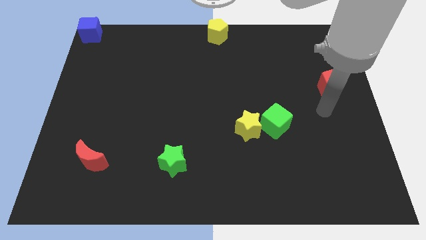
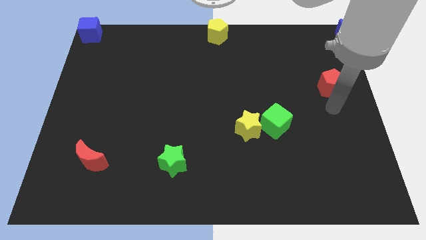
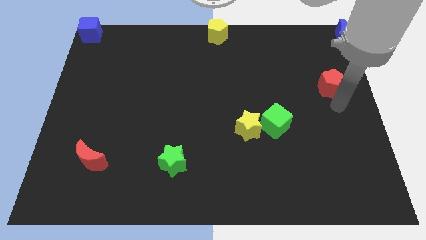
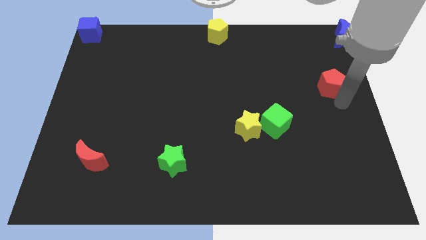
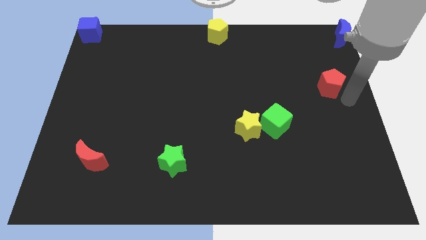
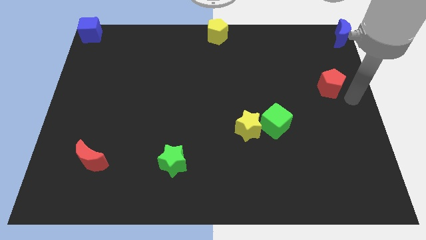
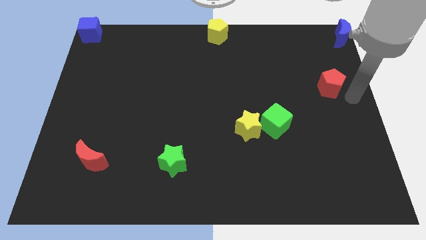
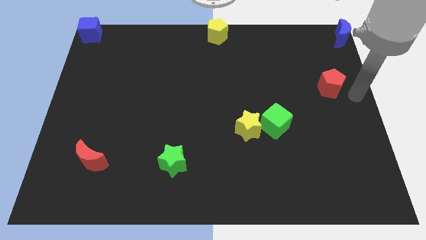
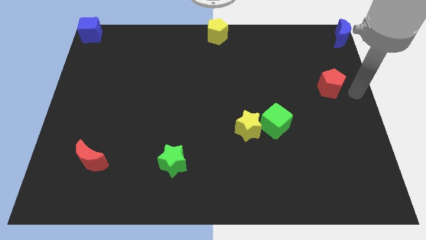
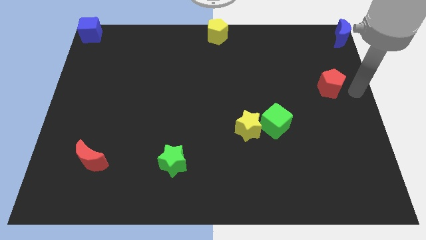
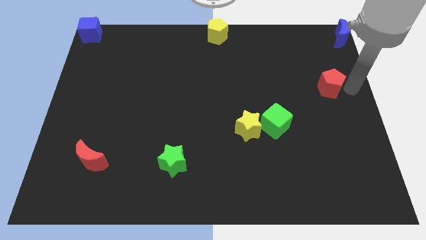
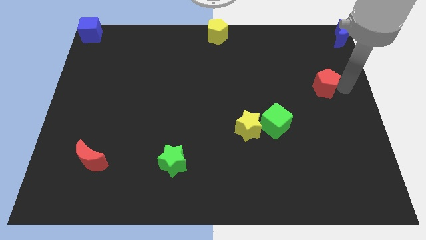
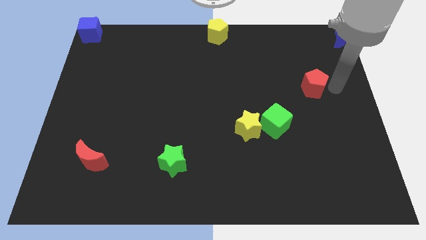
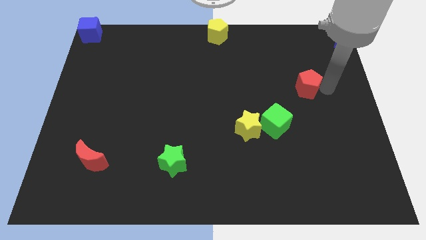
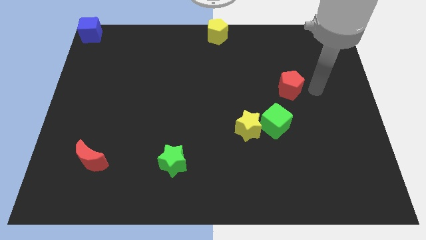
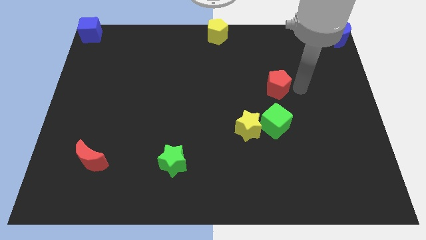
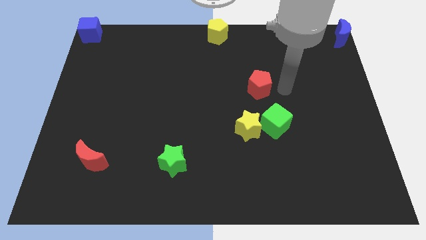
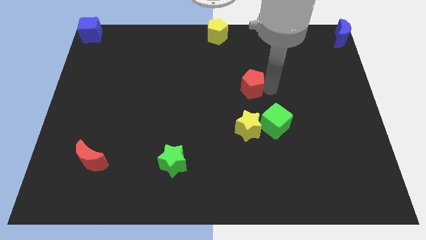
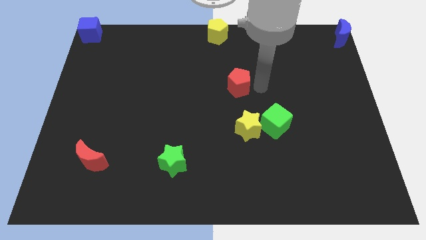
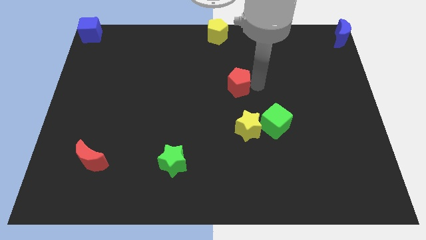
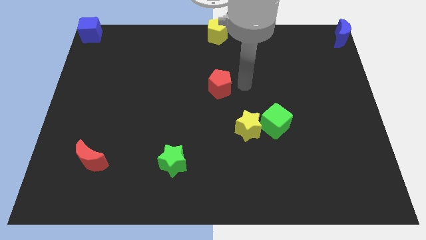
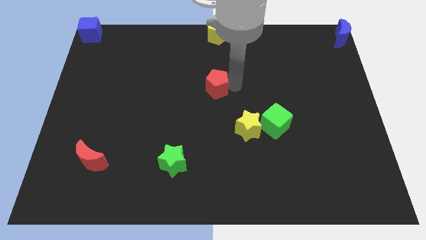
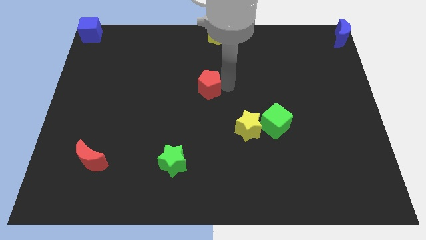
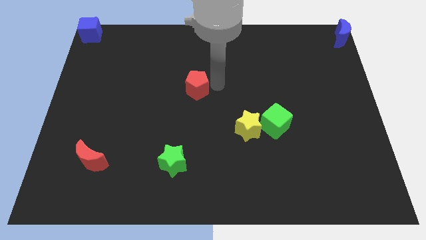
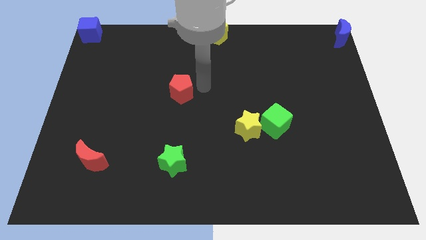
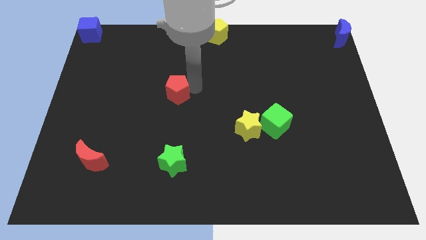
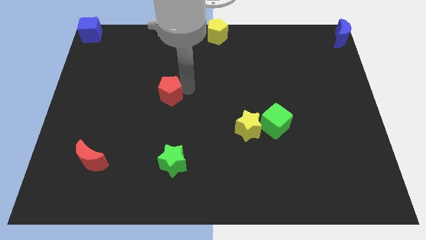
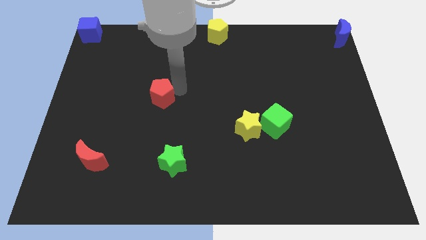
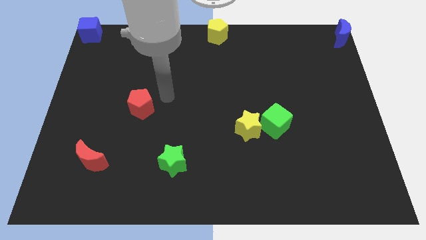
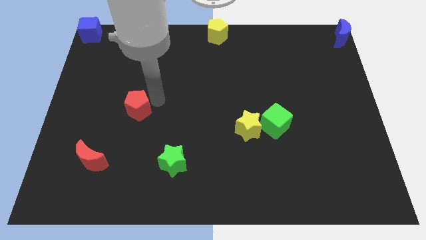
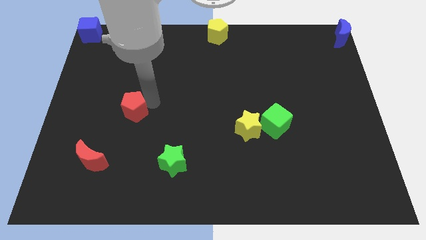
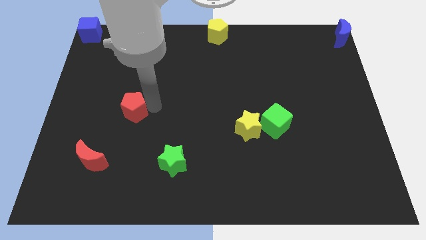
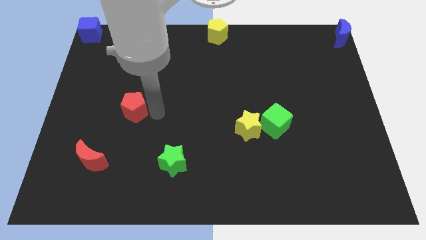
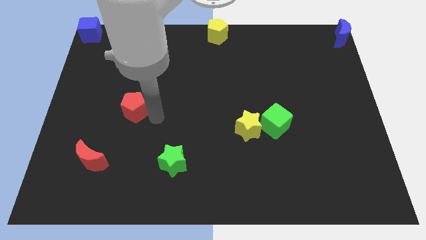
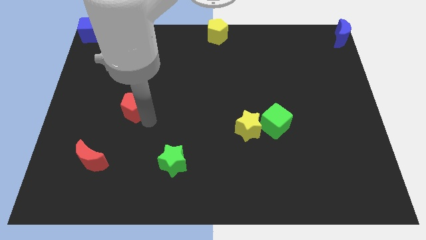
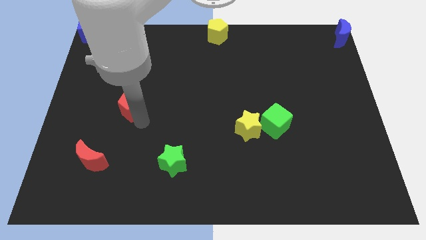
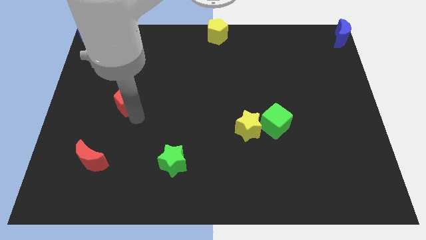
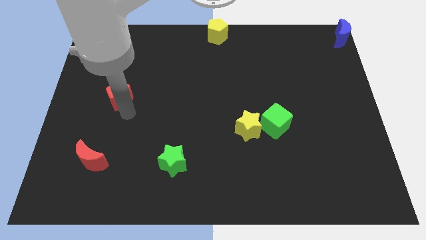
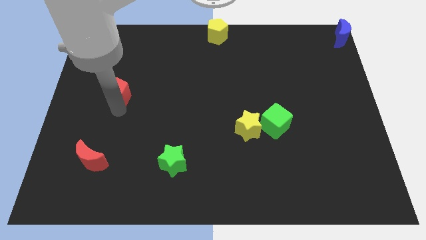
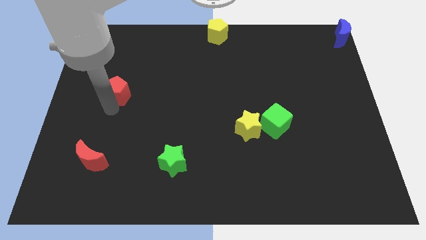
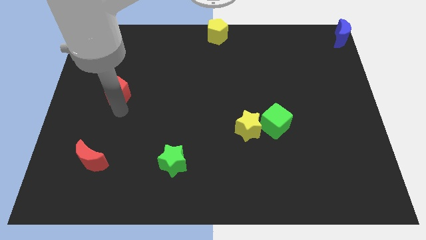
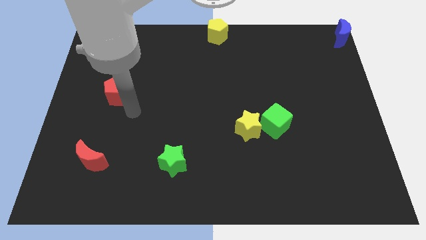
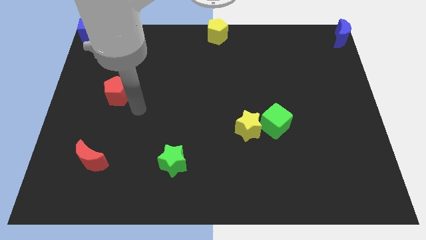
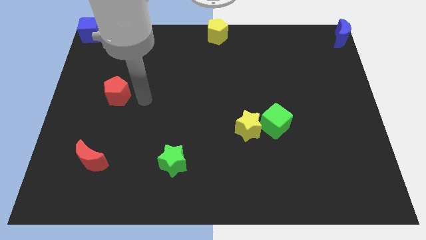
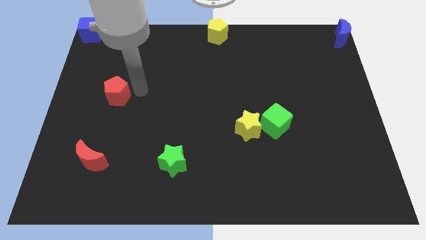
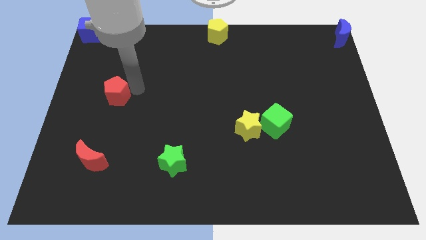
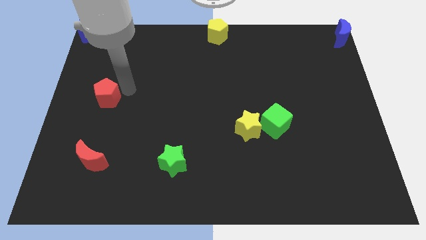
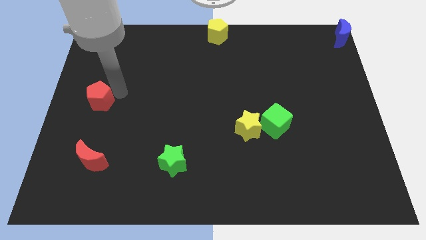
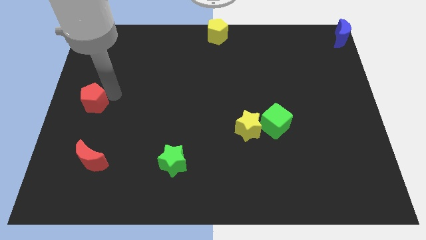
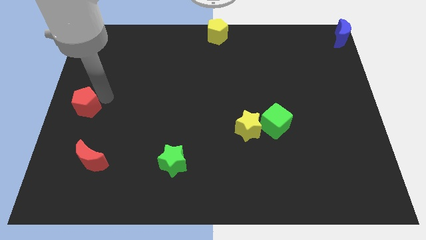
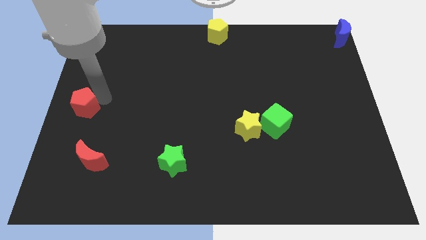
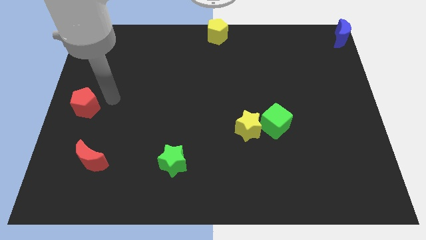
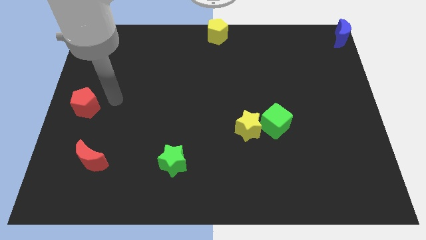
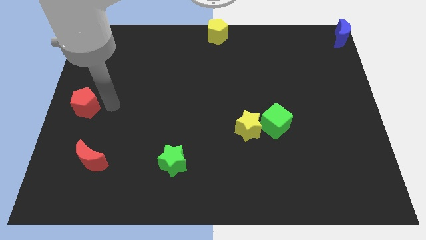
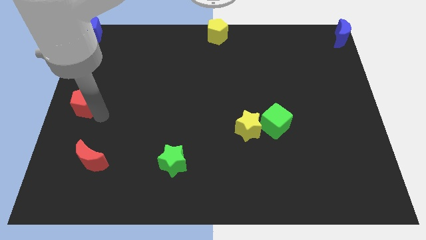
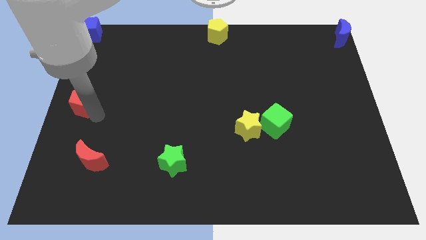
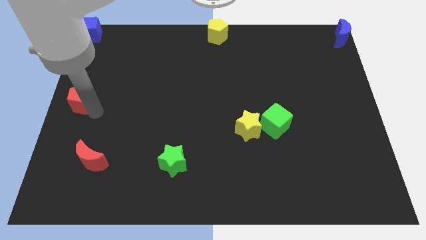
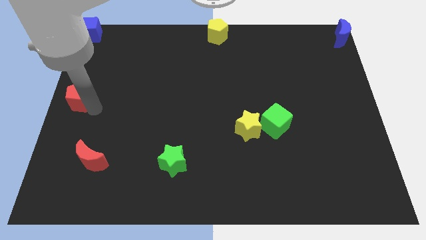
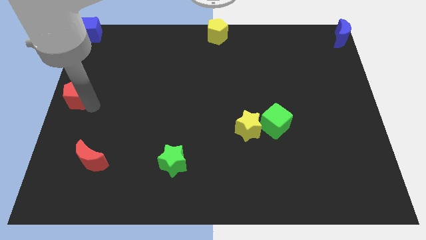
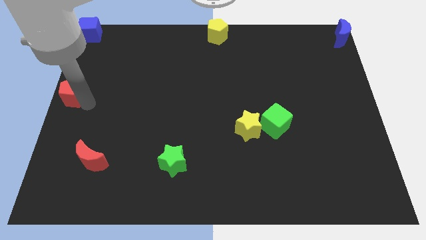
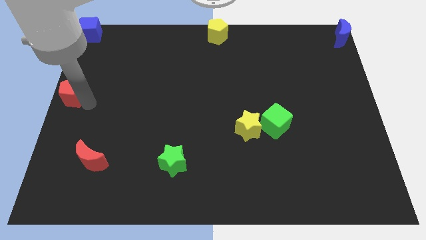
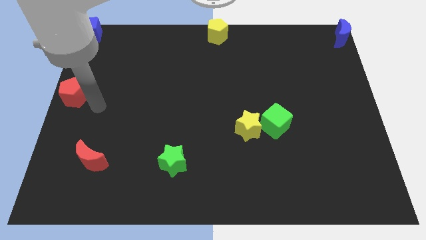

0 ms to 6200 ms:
move the red pentagon to the left center of the board

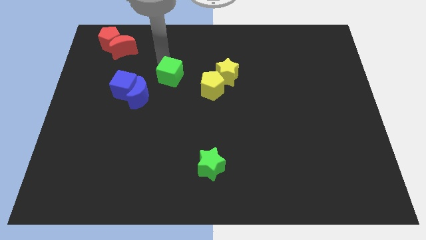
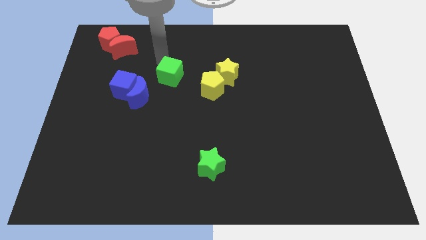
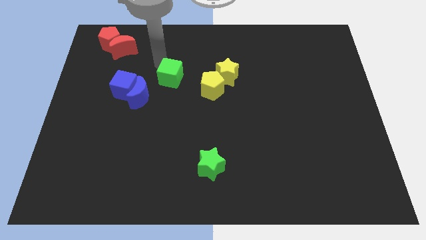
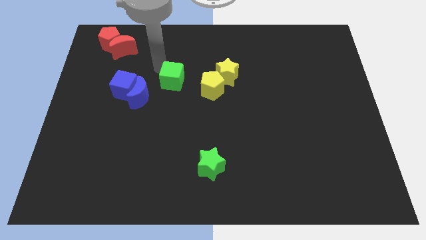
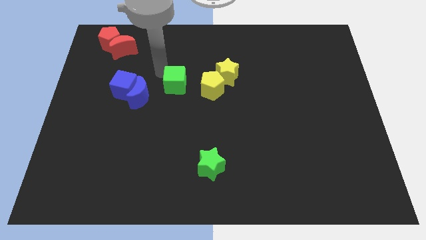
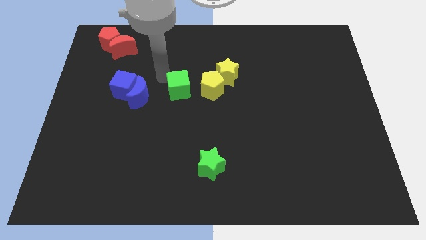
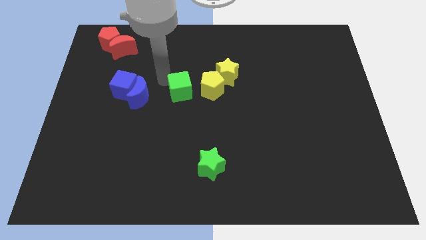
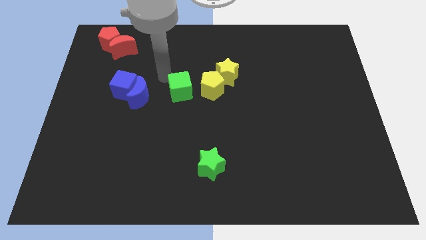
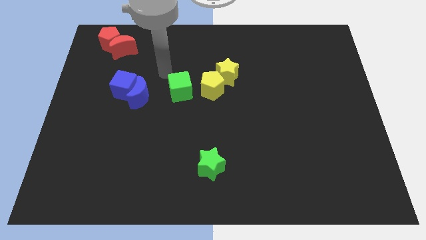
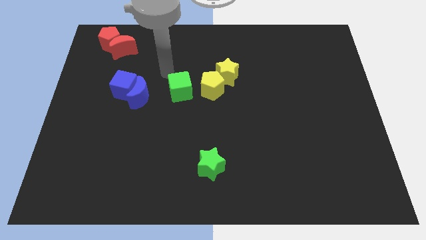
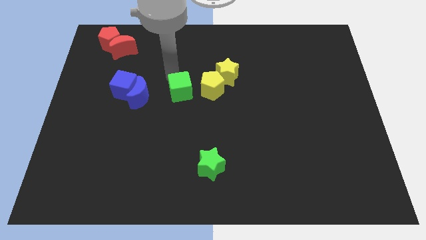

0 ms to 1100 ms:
place the green cube to the left of the green cube

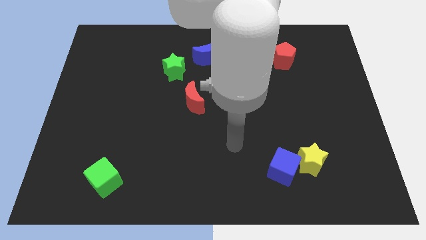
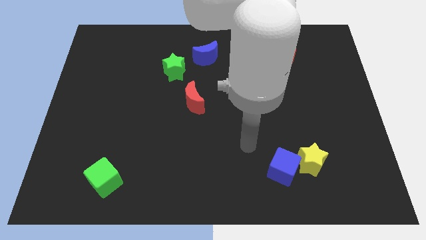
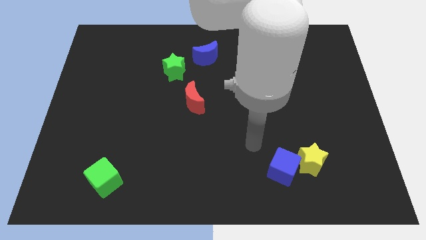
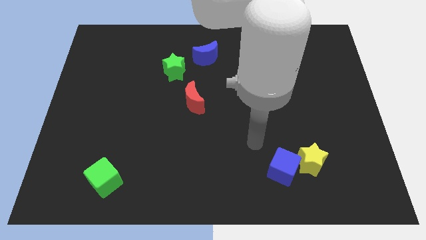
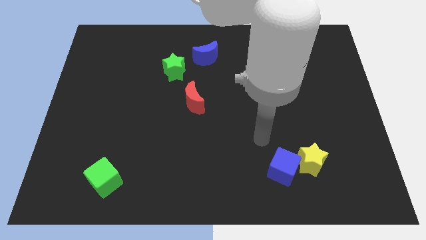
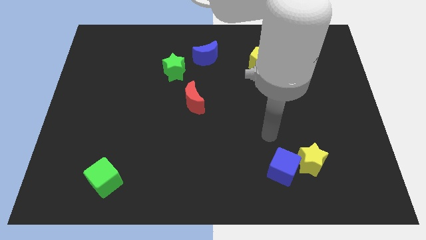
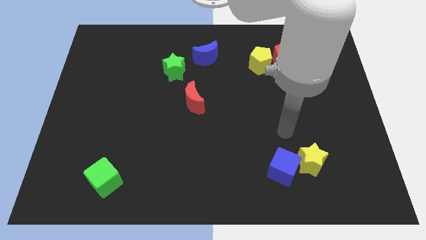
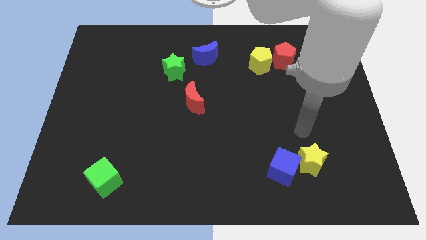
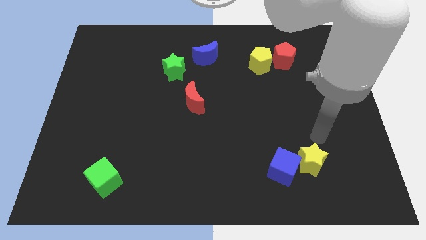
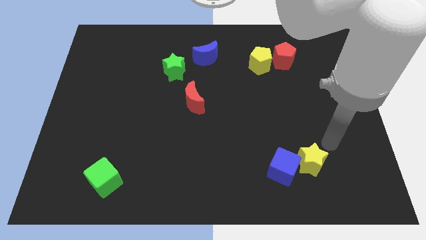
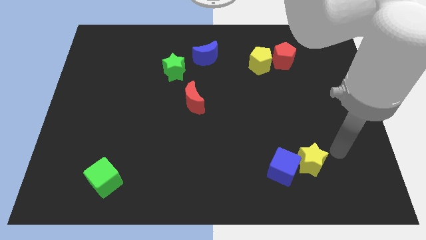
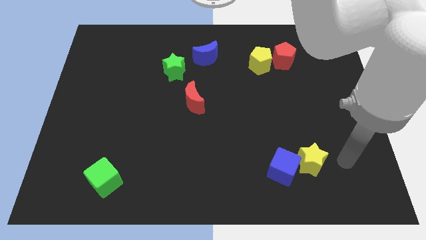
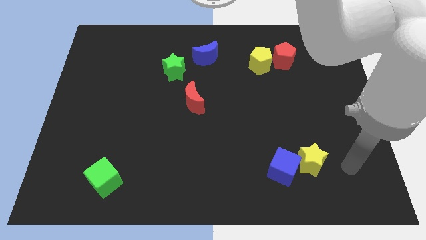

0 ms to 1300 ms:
place your arm at the right of the yellow star

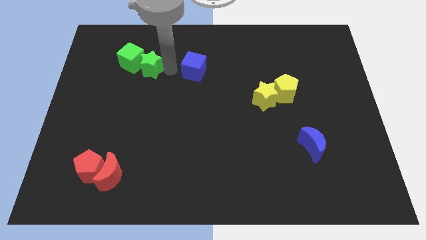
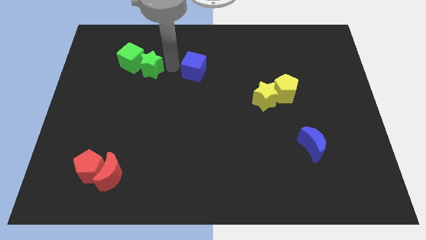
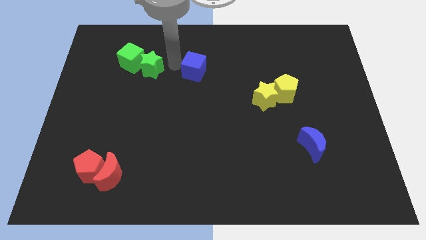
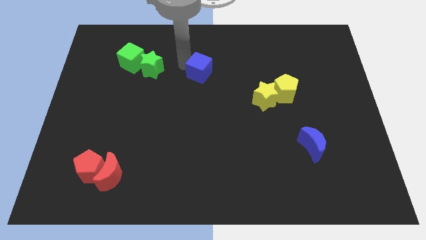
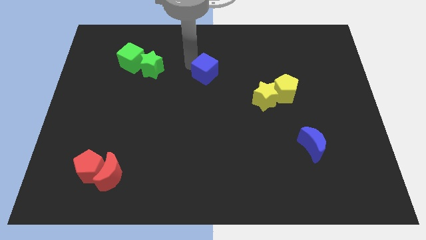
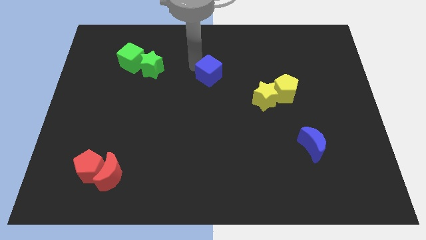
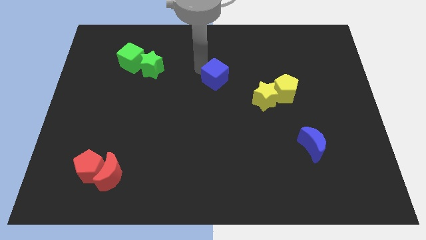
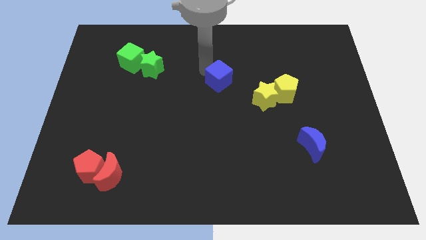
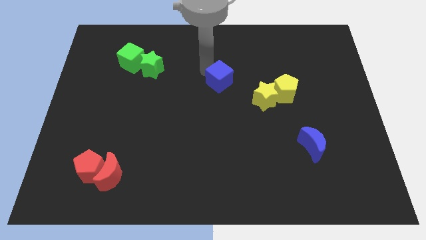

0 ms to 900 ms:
move the blue cube diagonally to the yellow star
